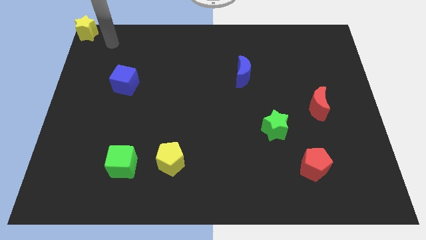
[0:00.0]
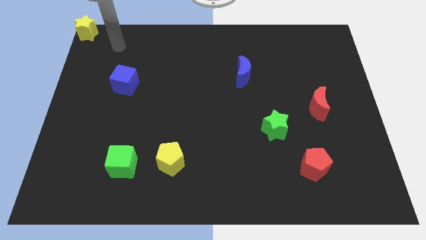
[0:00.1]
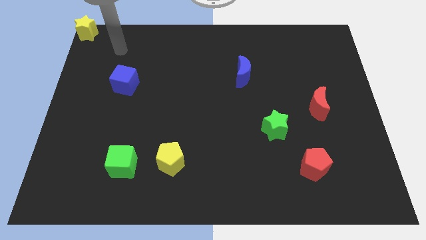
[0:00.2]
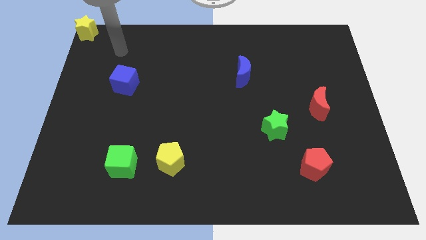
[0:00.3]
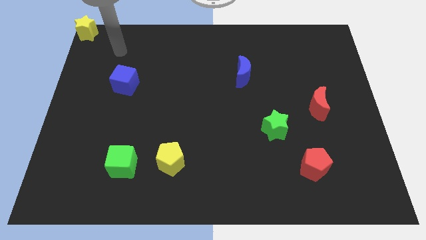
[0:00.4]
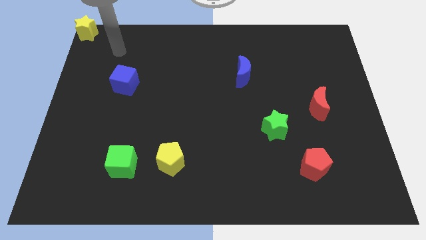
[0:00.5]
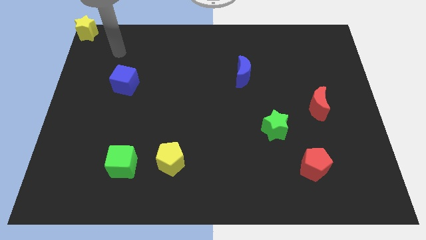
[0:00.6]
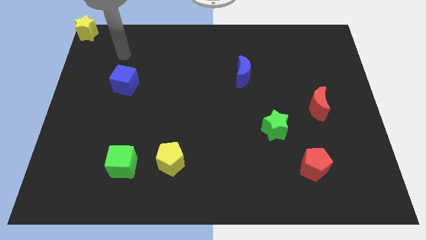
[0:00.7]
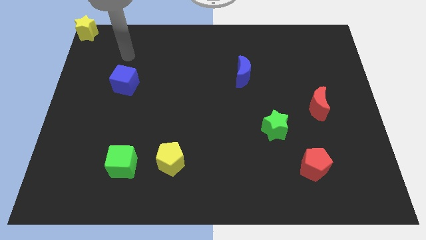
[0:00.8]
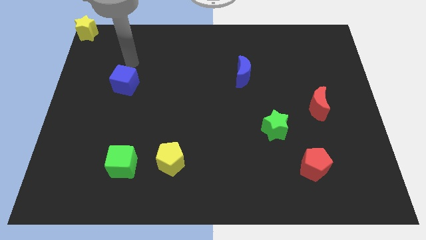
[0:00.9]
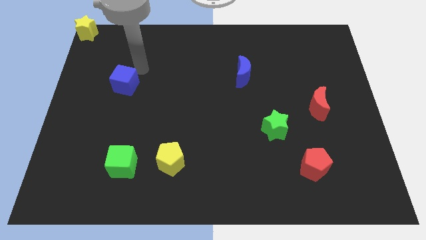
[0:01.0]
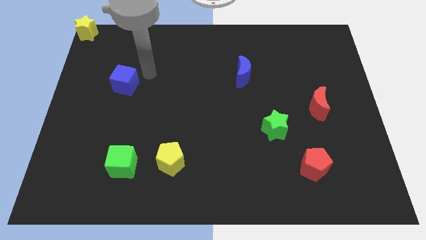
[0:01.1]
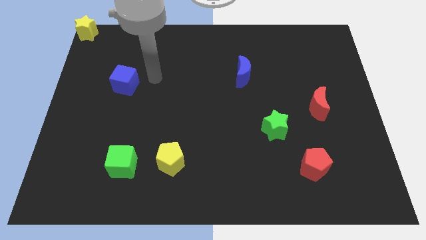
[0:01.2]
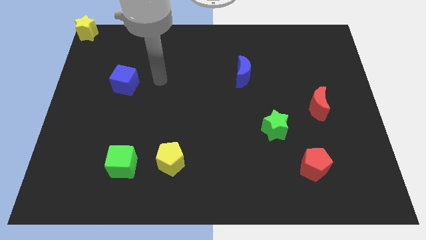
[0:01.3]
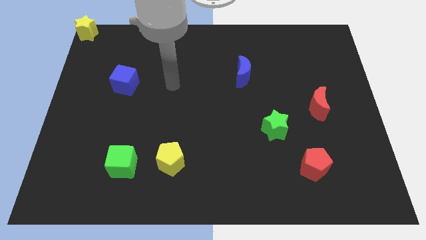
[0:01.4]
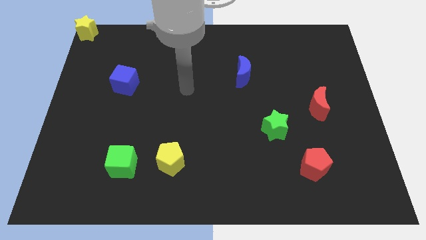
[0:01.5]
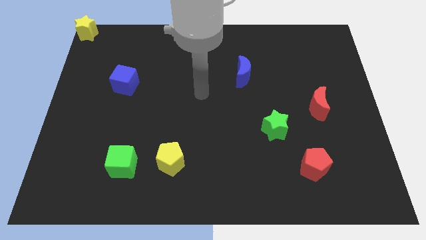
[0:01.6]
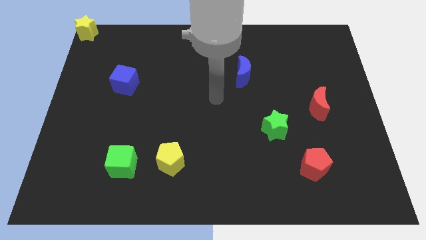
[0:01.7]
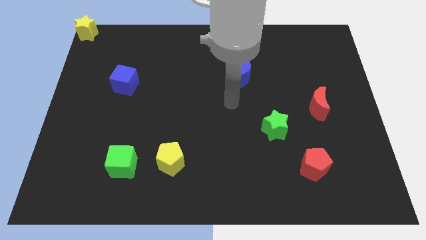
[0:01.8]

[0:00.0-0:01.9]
move the arm from the top left corner to the center of the board

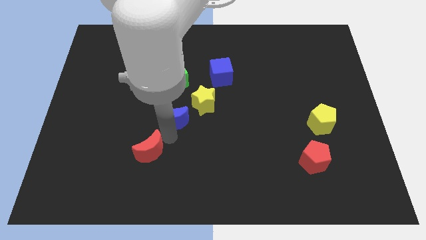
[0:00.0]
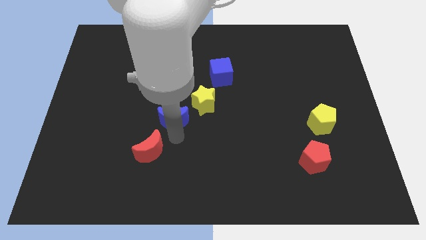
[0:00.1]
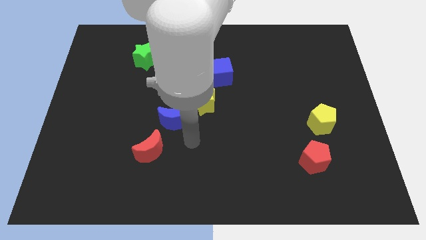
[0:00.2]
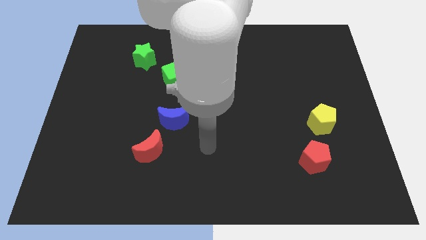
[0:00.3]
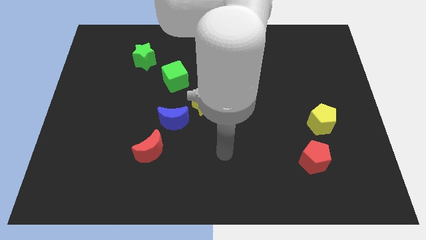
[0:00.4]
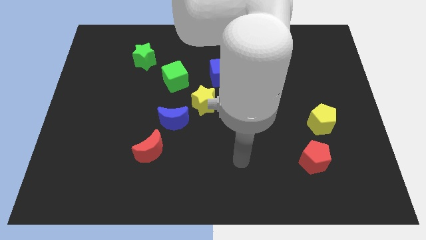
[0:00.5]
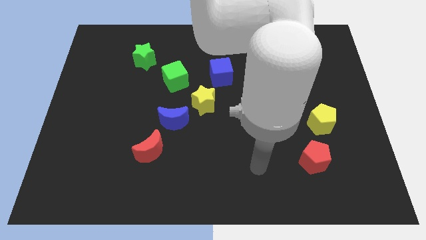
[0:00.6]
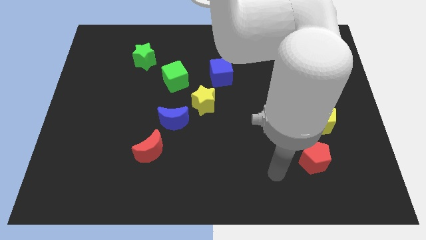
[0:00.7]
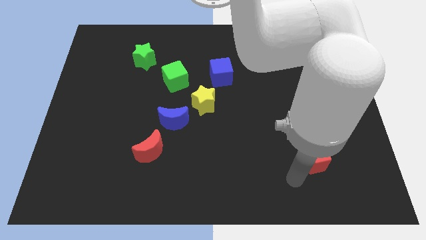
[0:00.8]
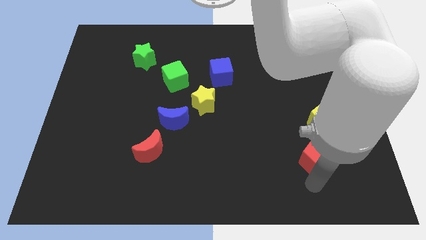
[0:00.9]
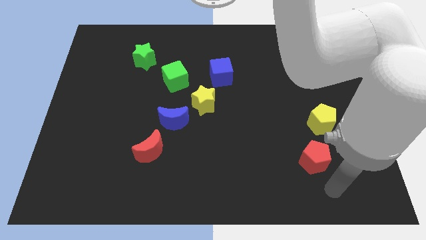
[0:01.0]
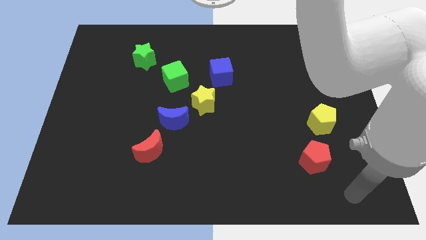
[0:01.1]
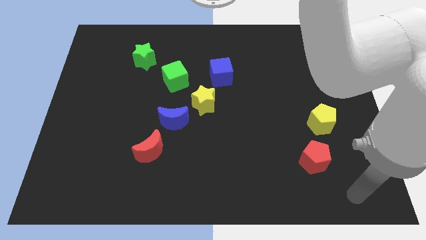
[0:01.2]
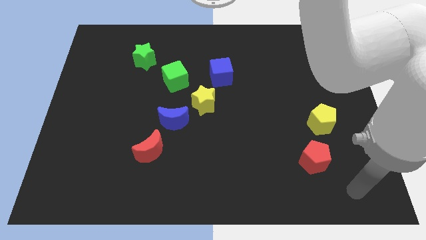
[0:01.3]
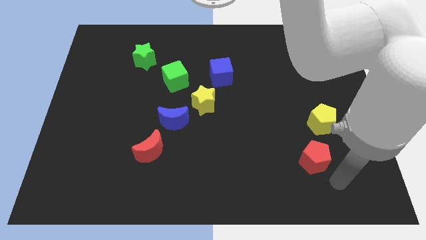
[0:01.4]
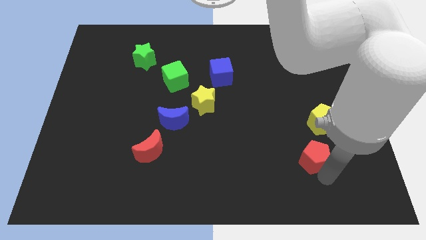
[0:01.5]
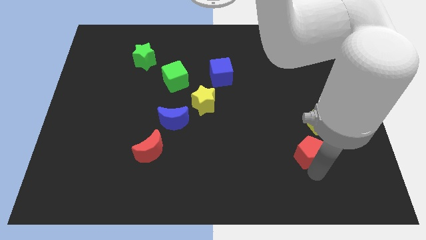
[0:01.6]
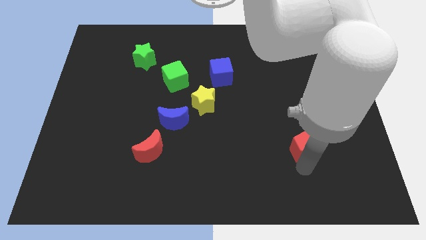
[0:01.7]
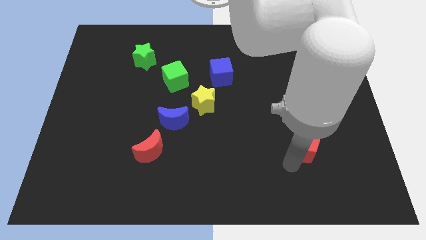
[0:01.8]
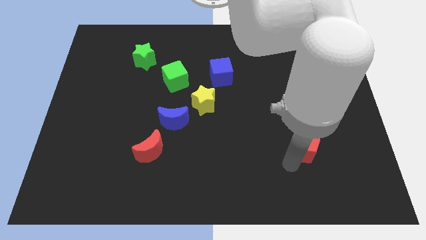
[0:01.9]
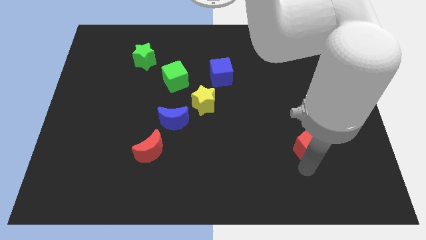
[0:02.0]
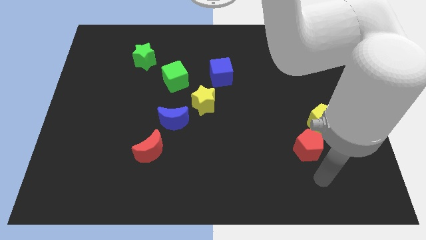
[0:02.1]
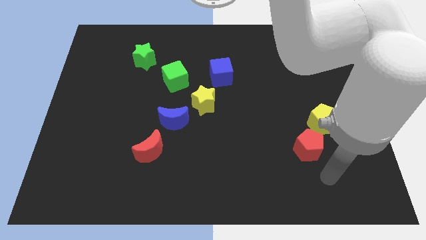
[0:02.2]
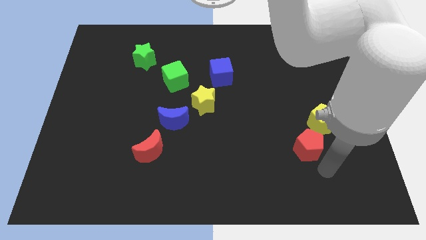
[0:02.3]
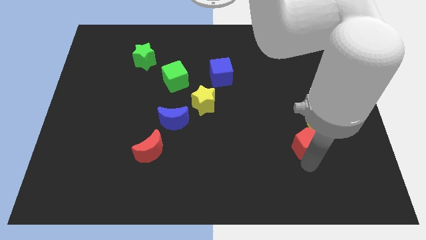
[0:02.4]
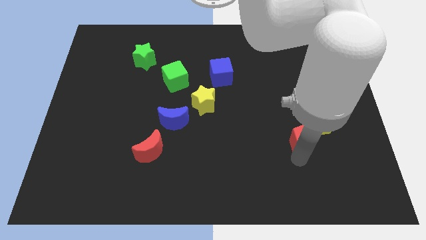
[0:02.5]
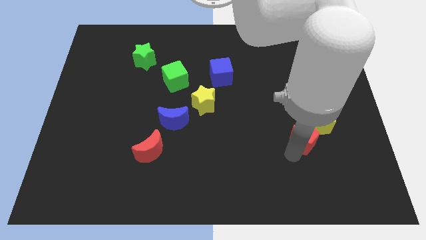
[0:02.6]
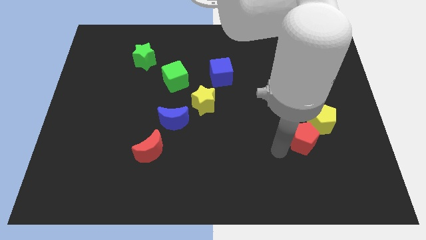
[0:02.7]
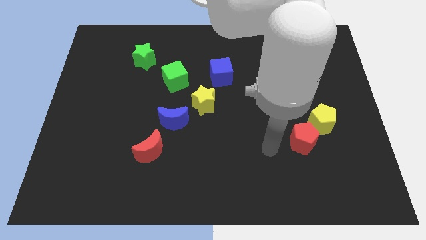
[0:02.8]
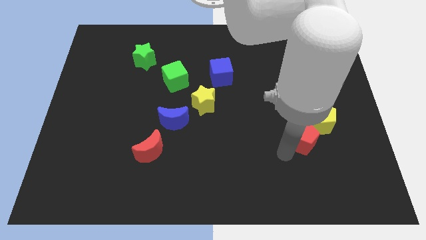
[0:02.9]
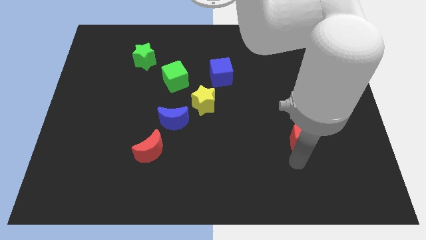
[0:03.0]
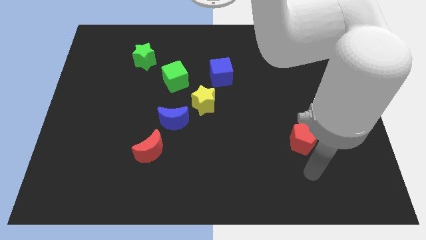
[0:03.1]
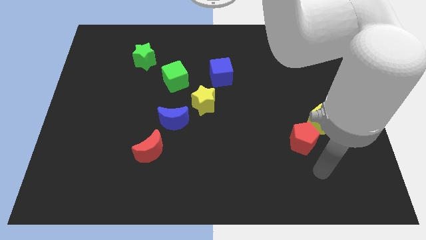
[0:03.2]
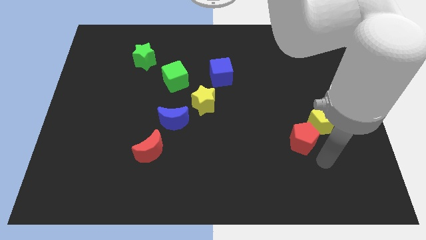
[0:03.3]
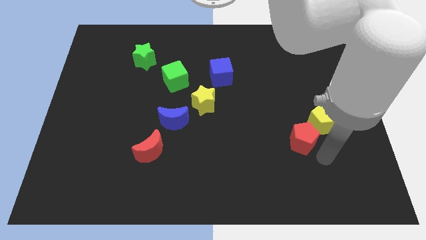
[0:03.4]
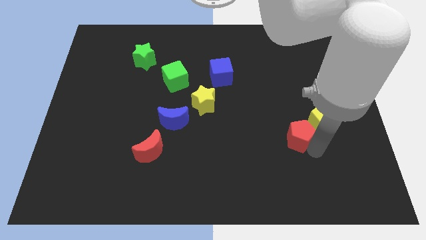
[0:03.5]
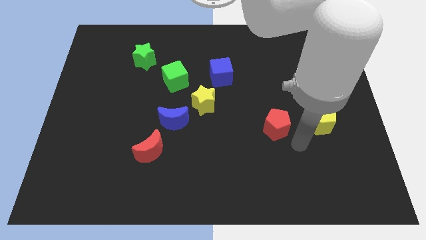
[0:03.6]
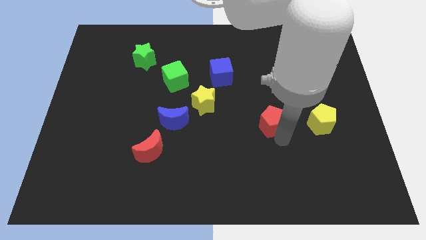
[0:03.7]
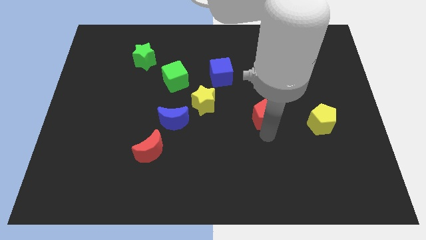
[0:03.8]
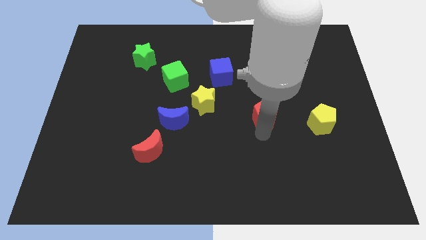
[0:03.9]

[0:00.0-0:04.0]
move the red pentagon to the left of the yellow pentagon

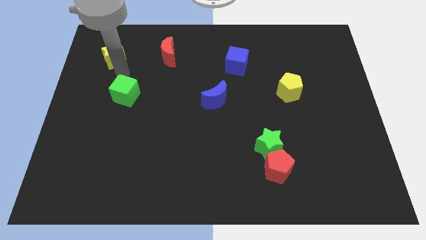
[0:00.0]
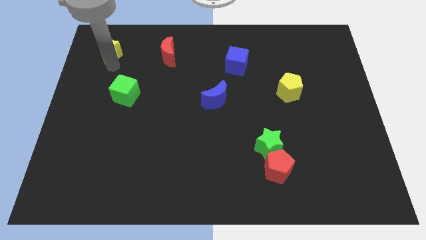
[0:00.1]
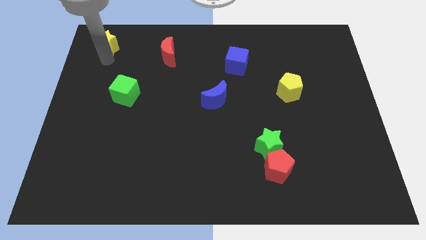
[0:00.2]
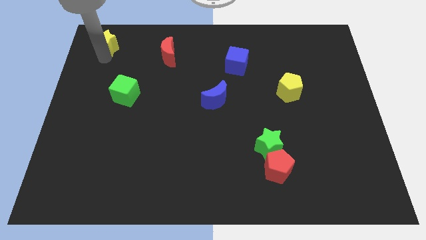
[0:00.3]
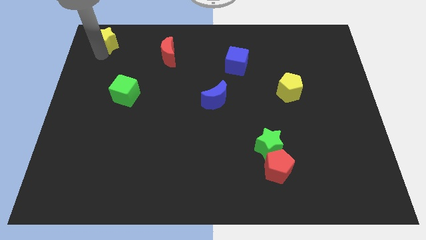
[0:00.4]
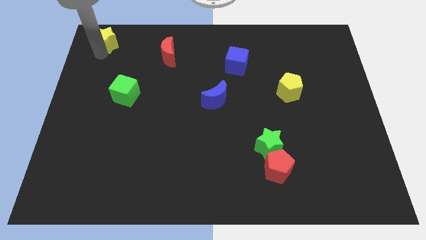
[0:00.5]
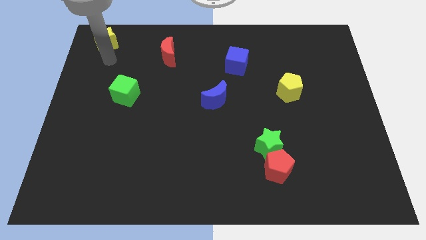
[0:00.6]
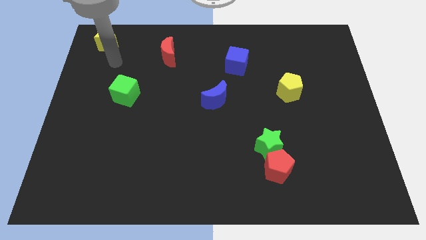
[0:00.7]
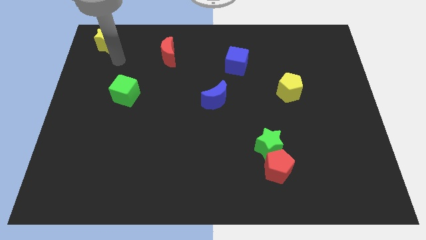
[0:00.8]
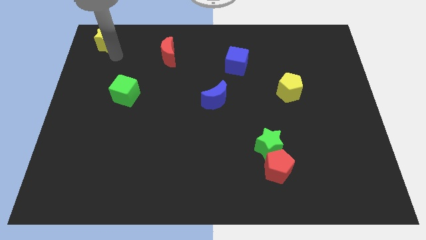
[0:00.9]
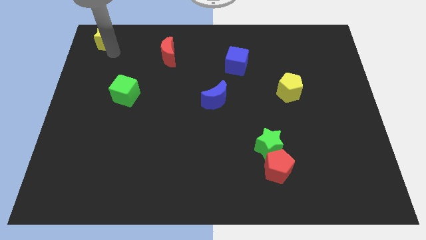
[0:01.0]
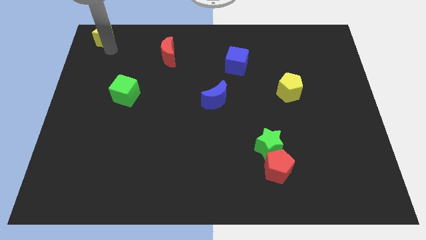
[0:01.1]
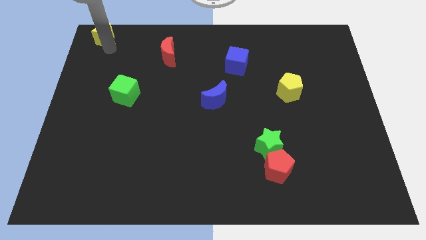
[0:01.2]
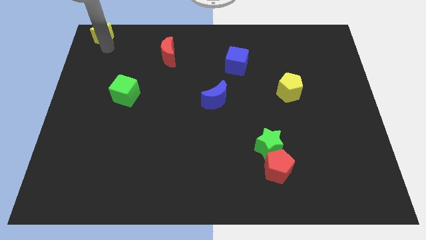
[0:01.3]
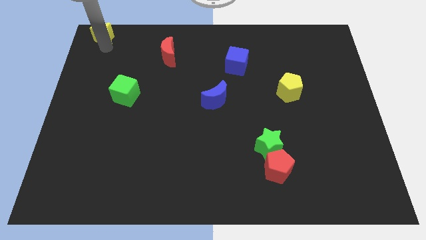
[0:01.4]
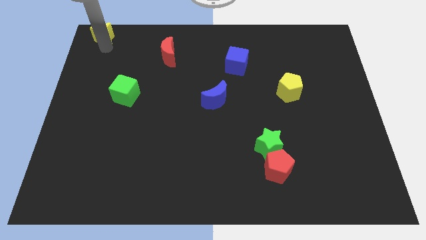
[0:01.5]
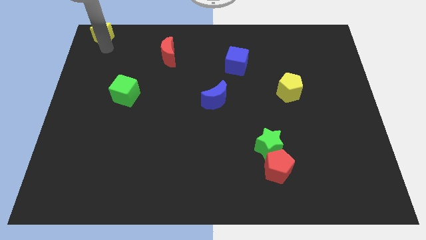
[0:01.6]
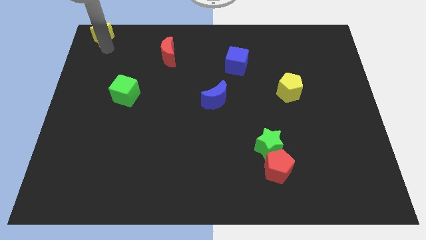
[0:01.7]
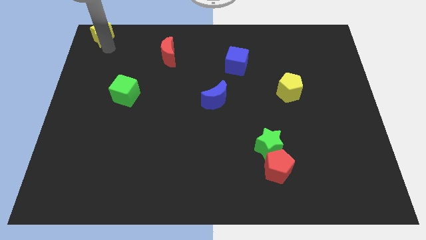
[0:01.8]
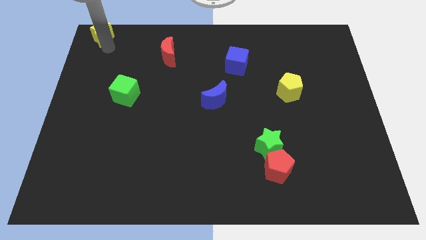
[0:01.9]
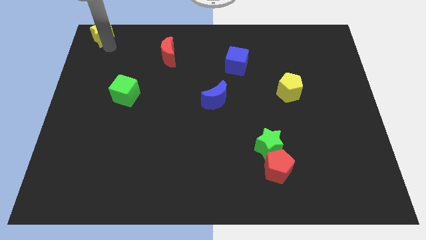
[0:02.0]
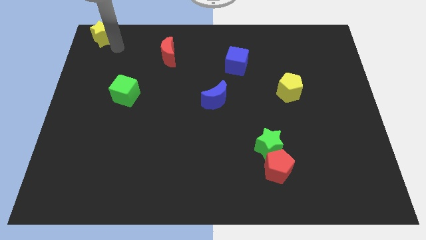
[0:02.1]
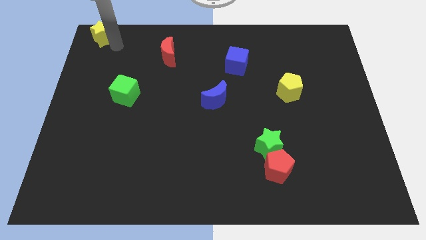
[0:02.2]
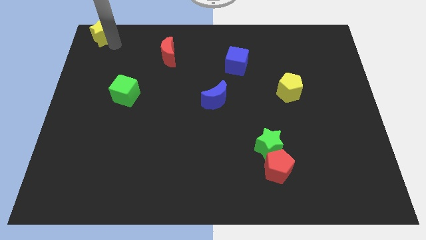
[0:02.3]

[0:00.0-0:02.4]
move the yellow star to the top left of the board

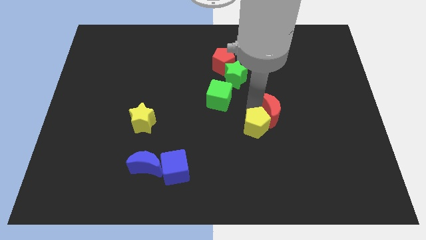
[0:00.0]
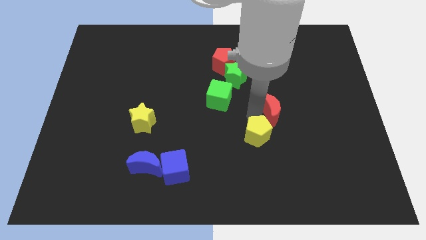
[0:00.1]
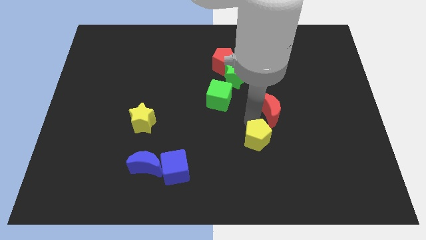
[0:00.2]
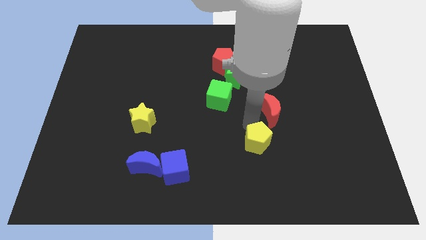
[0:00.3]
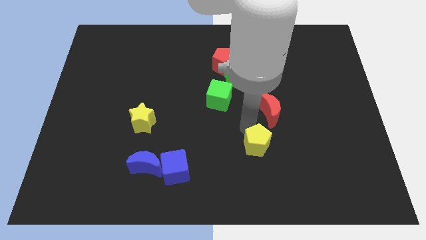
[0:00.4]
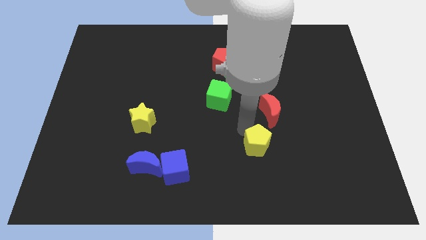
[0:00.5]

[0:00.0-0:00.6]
separate the yellow pentagon from the red crescent

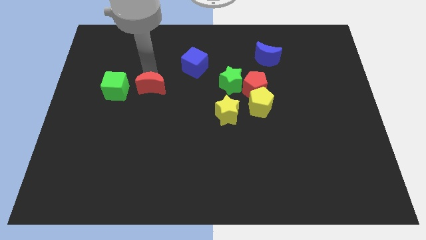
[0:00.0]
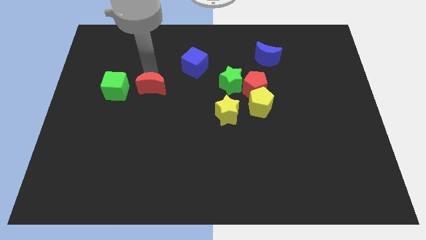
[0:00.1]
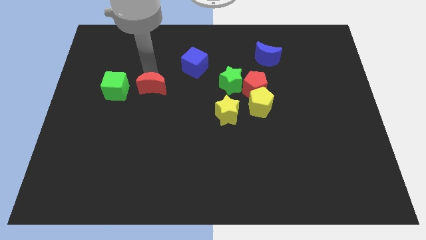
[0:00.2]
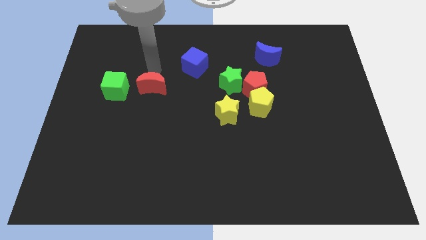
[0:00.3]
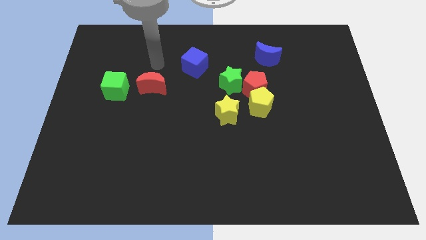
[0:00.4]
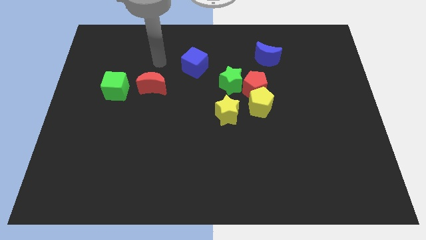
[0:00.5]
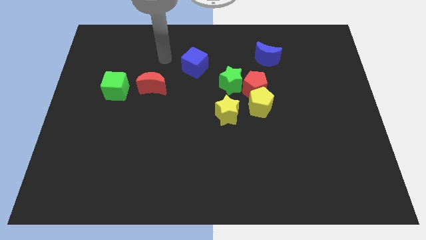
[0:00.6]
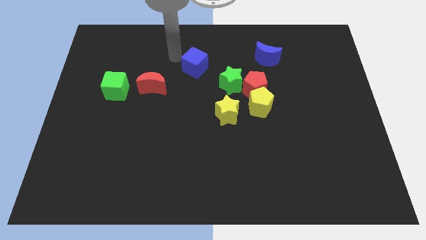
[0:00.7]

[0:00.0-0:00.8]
move arm away from red moon
